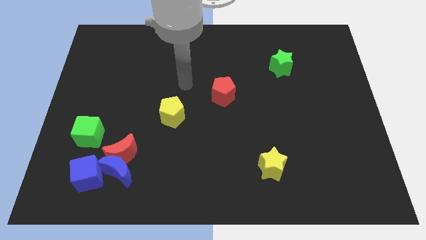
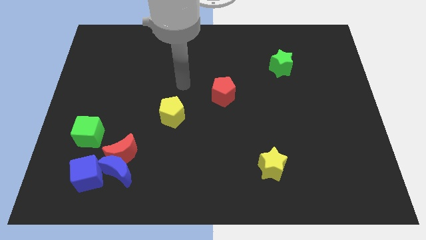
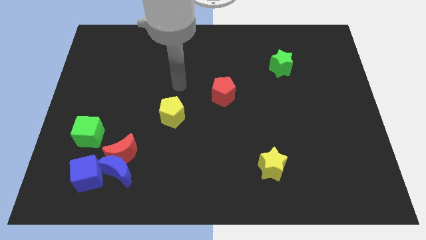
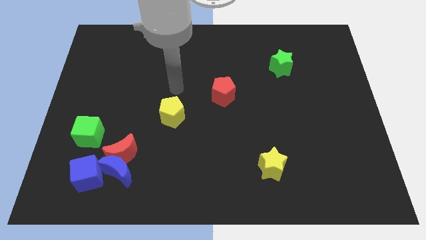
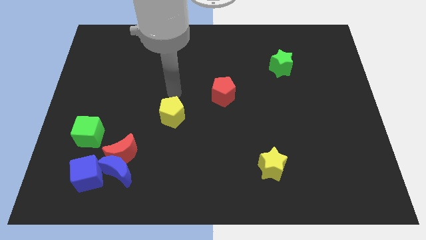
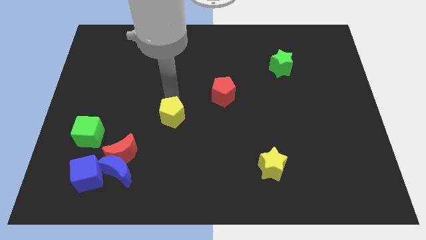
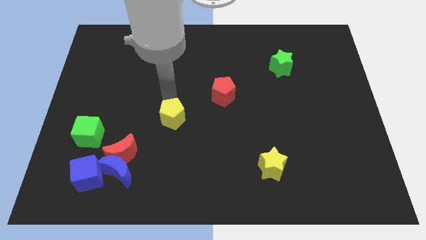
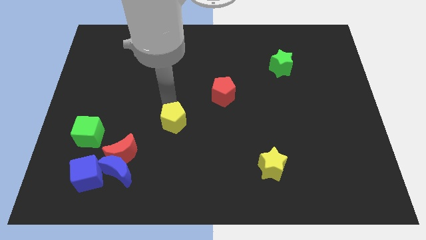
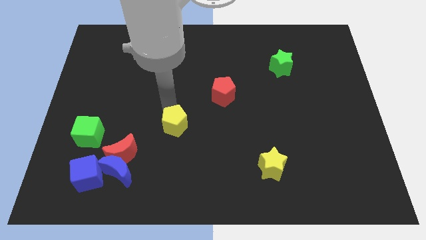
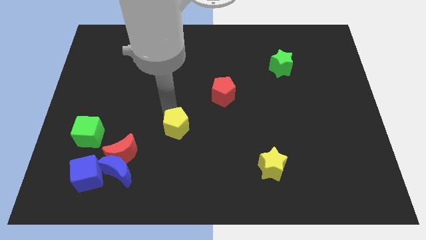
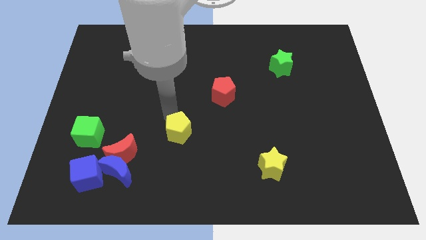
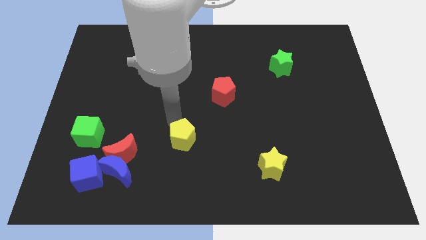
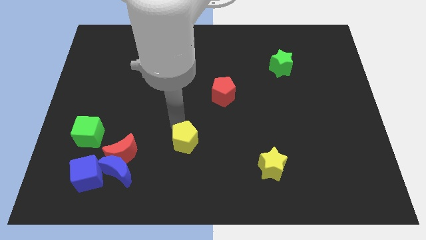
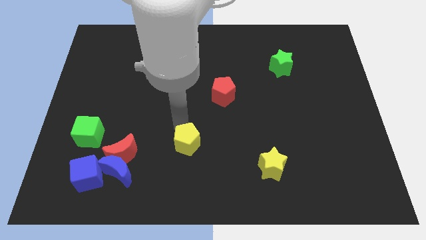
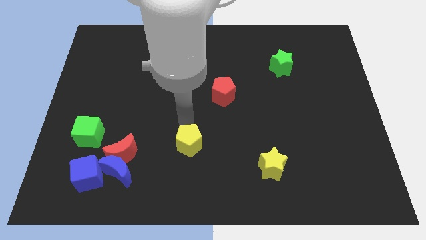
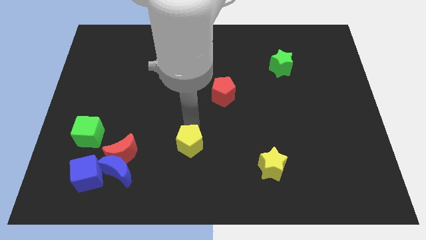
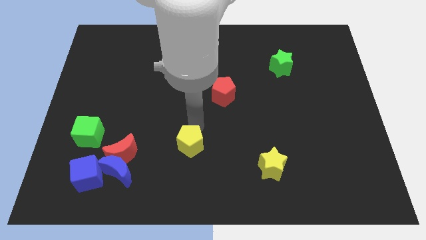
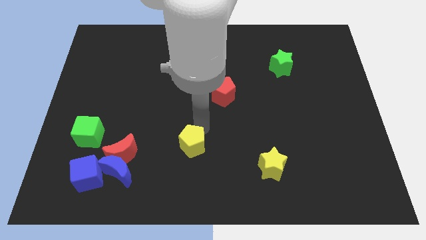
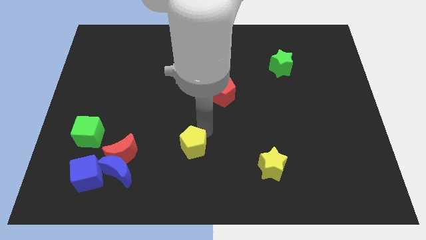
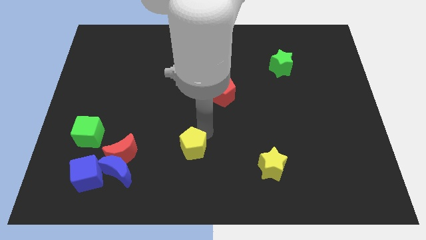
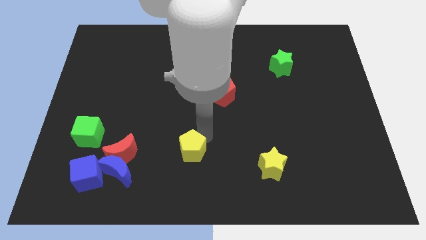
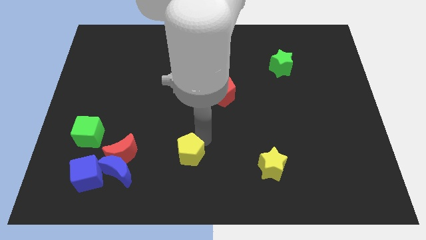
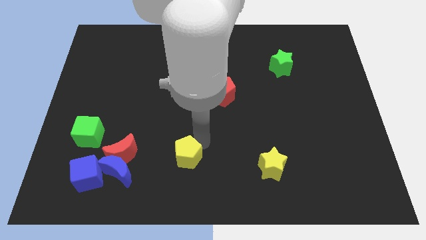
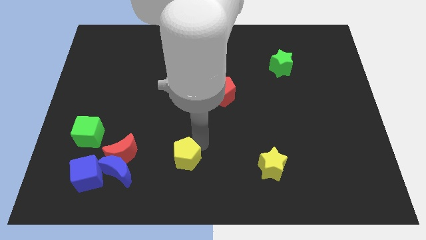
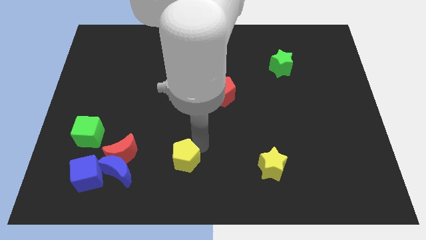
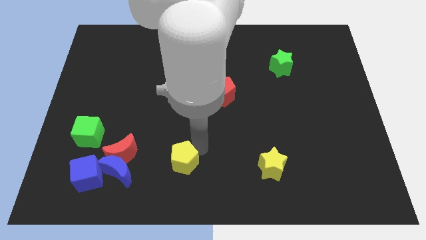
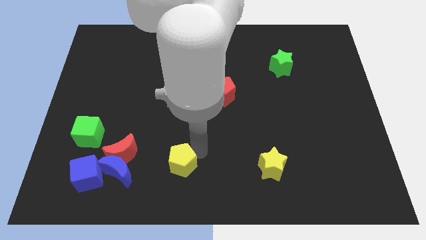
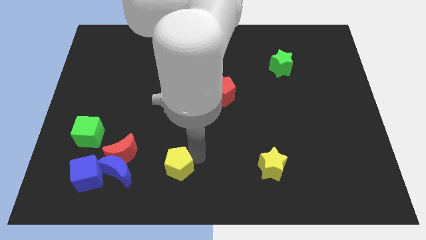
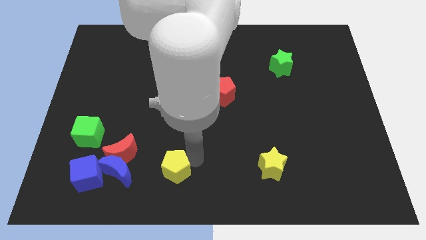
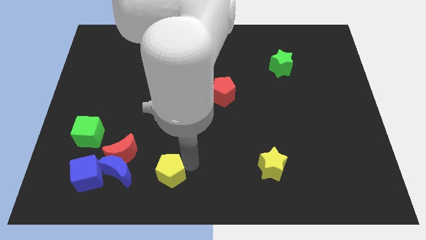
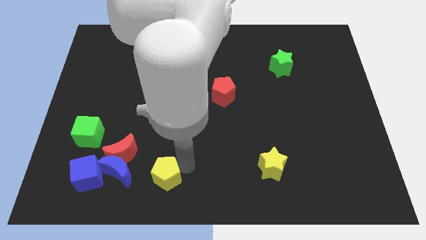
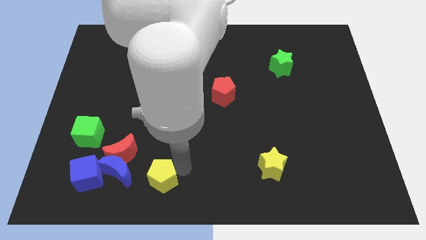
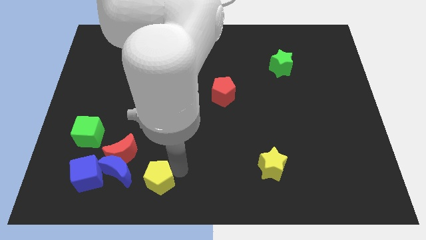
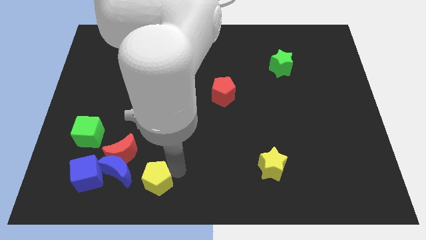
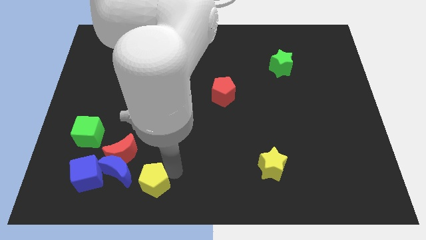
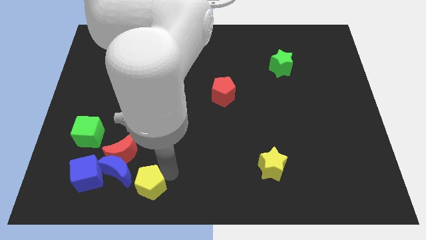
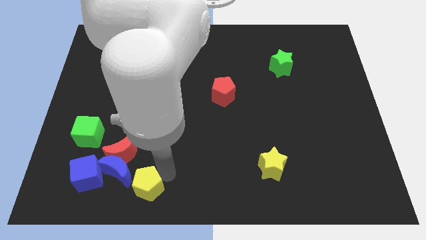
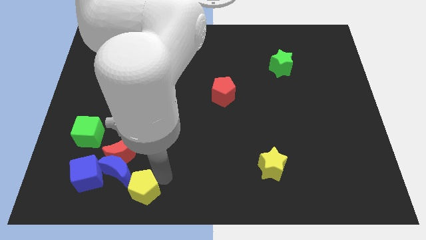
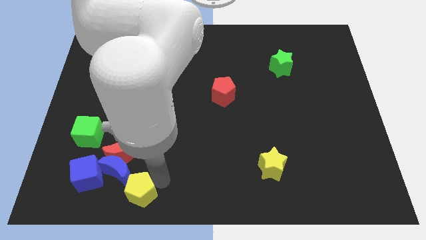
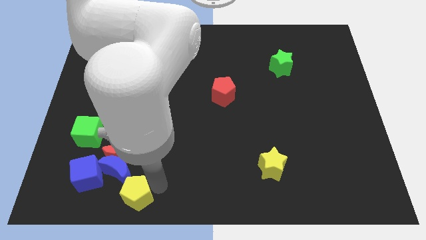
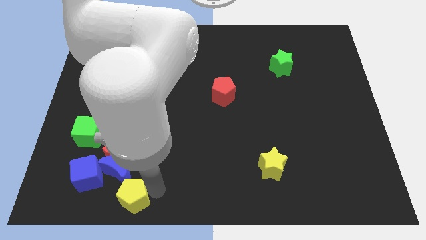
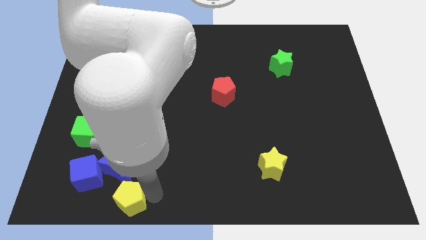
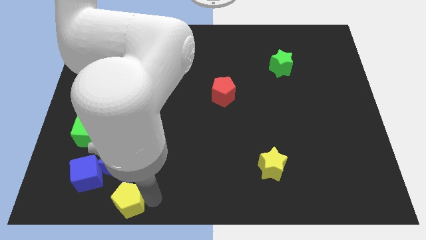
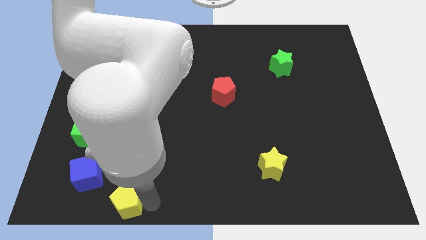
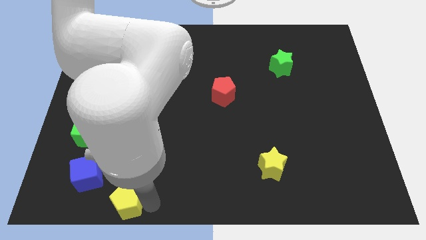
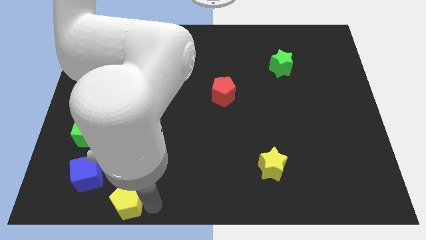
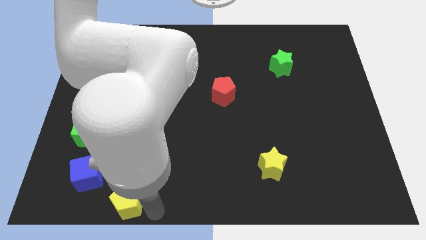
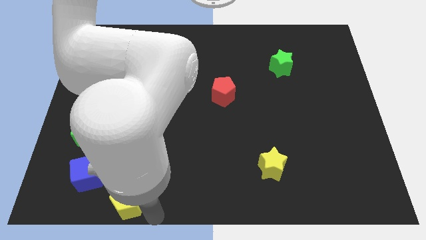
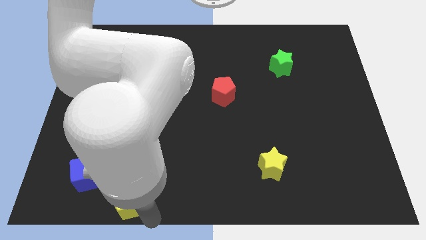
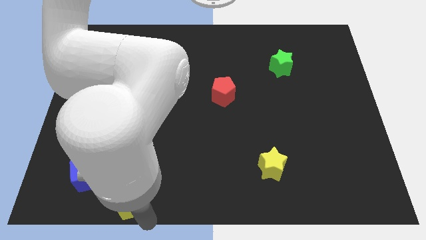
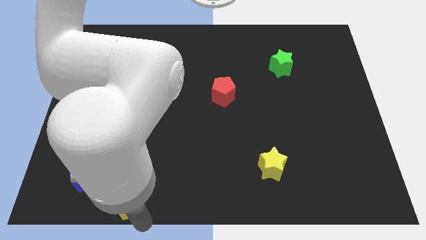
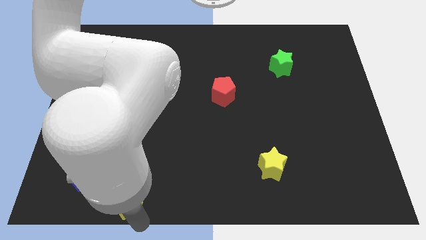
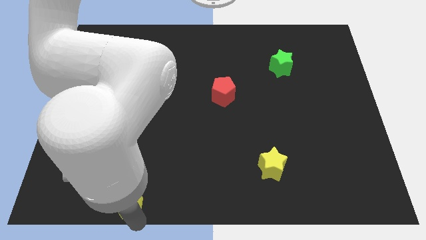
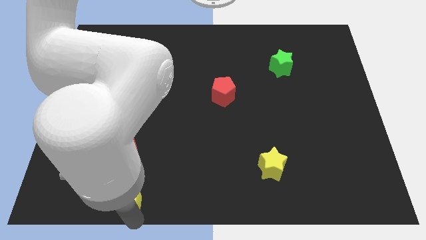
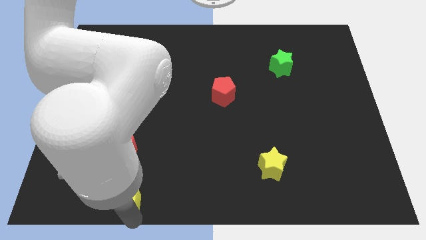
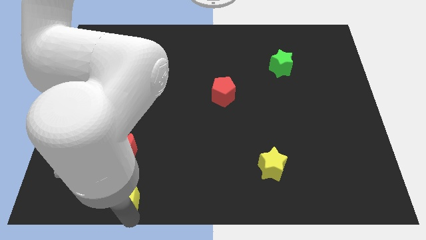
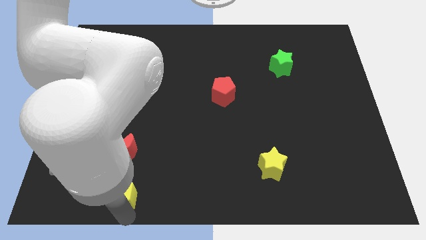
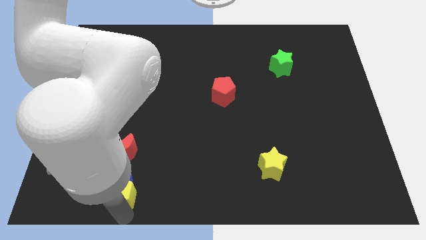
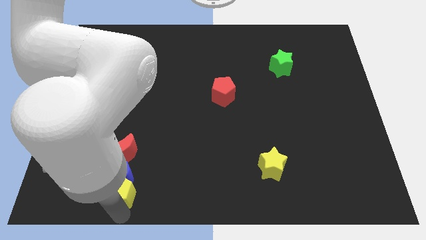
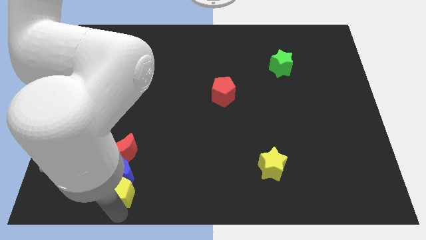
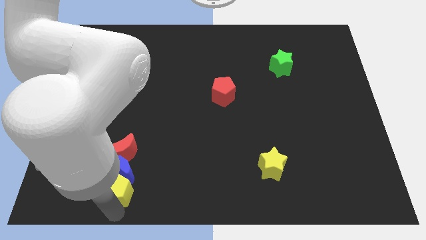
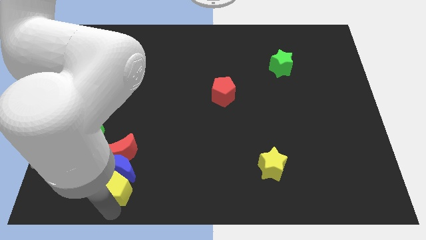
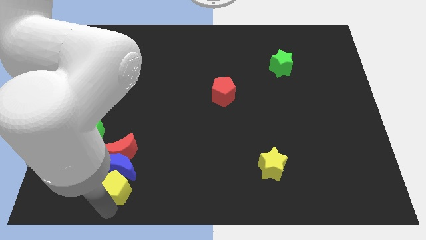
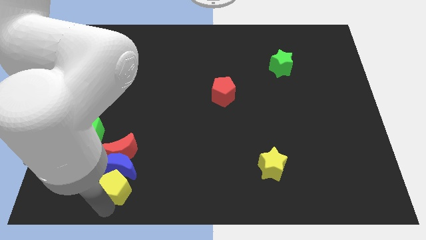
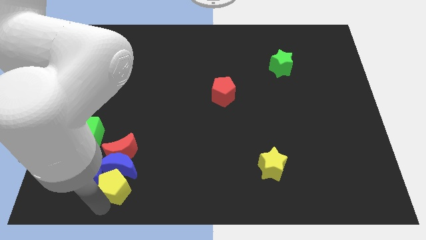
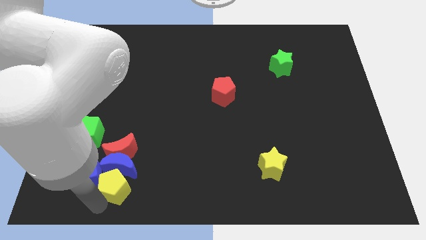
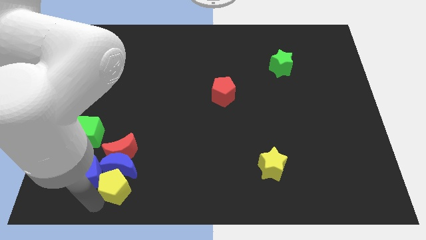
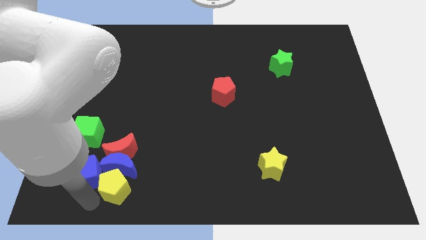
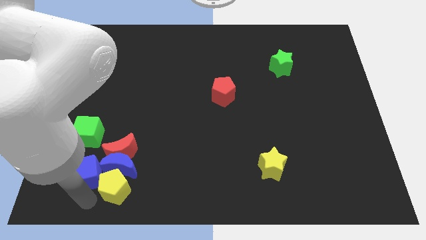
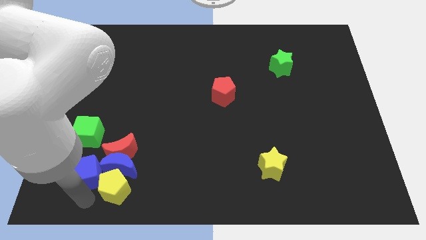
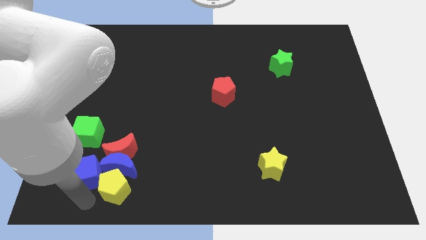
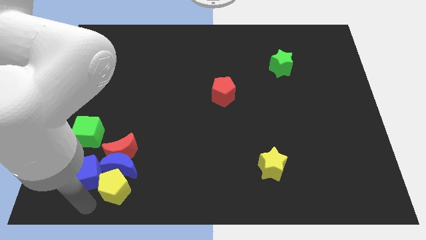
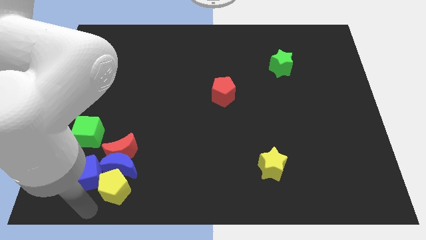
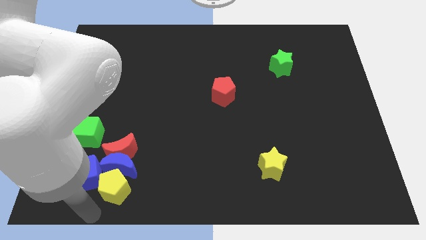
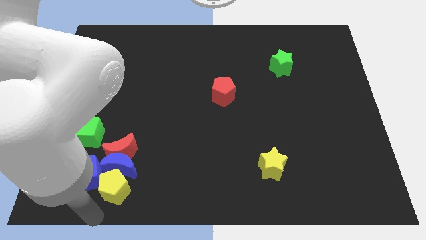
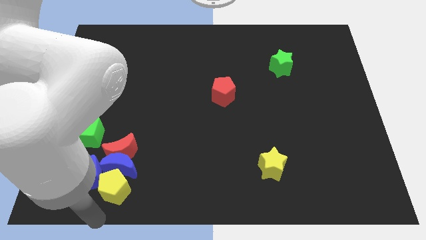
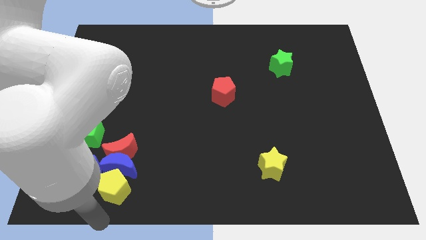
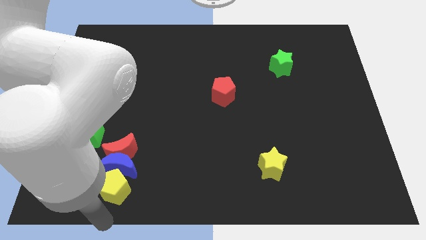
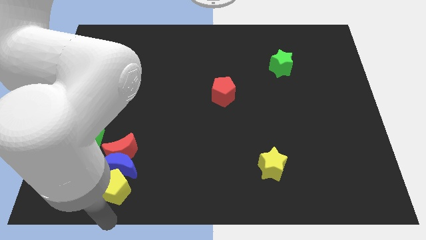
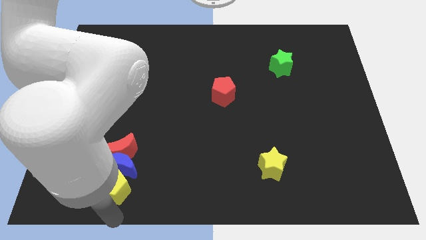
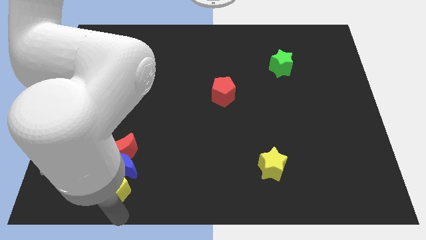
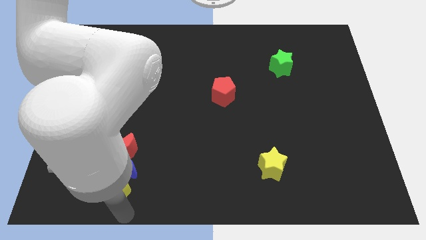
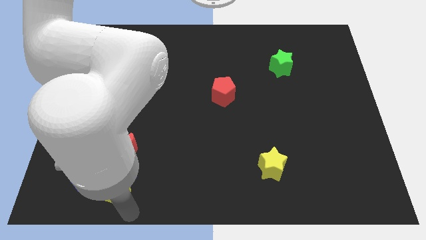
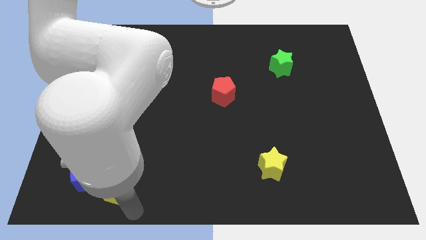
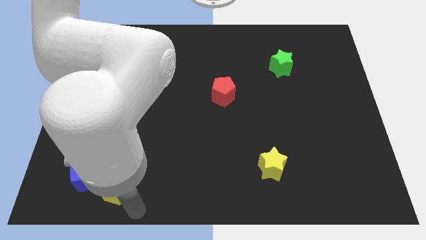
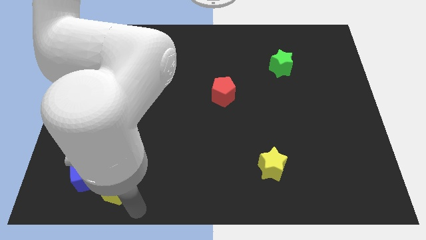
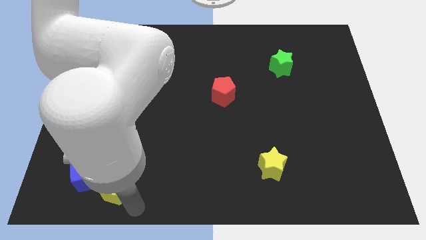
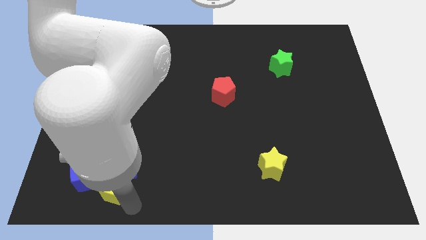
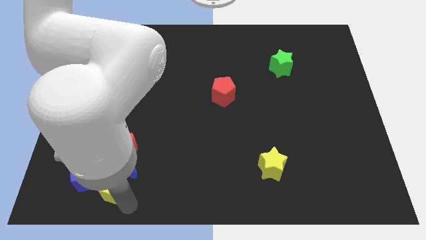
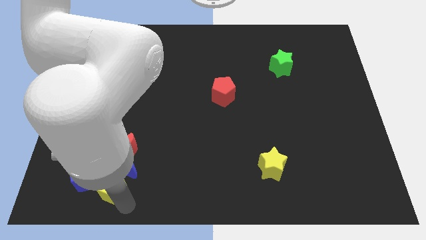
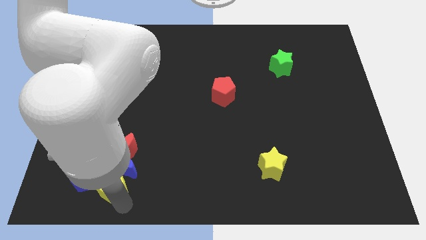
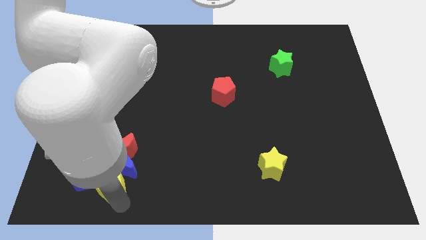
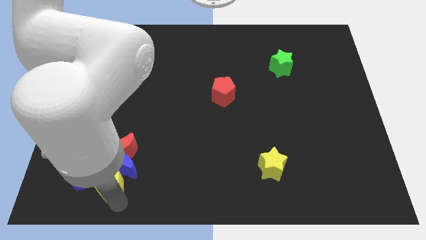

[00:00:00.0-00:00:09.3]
push the yellow pentagon close to the blue cube
